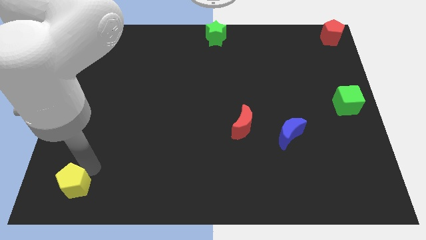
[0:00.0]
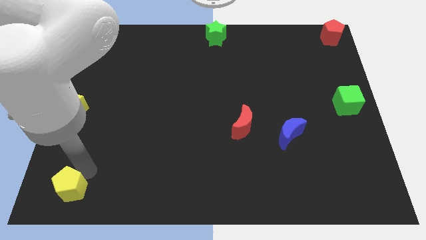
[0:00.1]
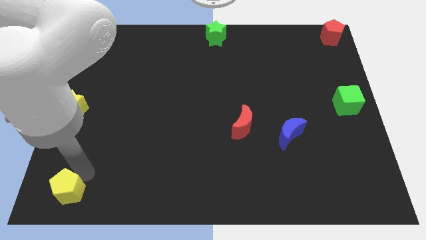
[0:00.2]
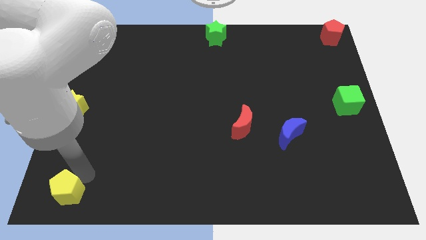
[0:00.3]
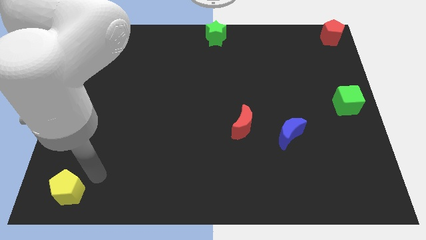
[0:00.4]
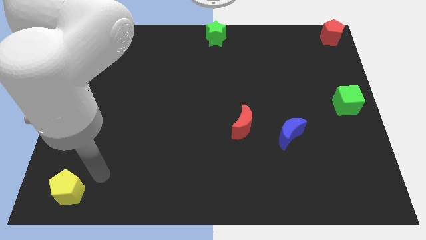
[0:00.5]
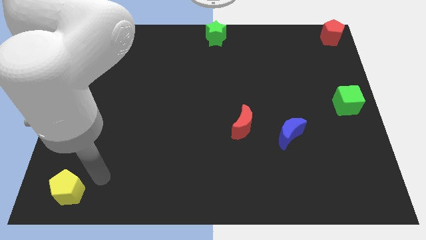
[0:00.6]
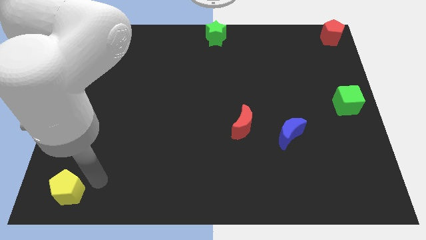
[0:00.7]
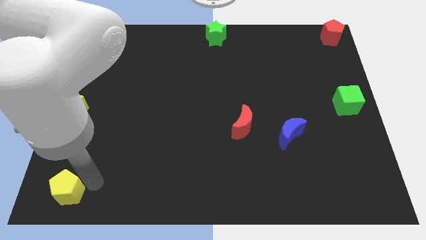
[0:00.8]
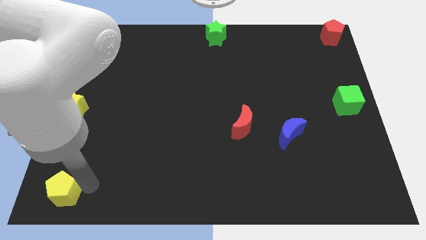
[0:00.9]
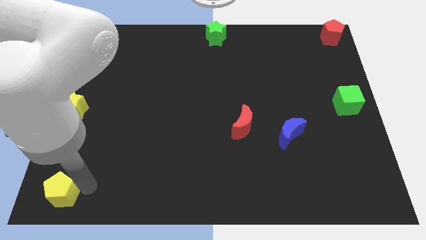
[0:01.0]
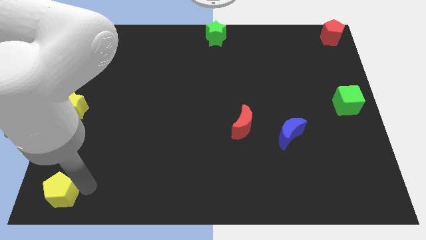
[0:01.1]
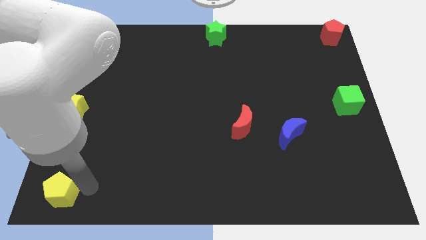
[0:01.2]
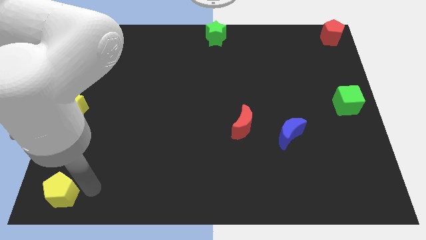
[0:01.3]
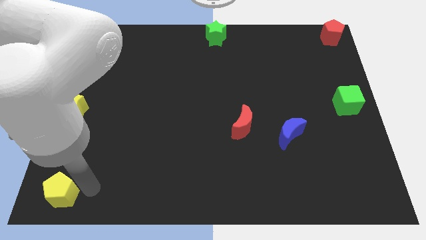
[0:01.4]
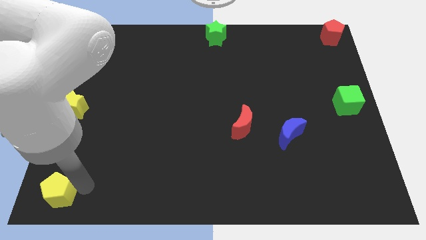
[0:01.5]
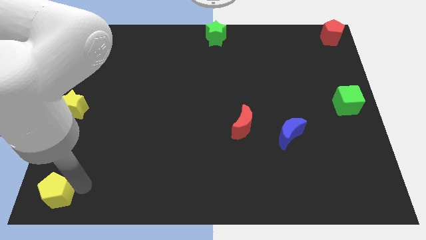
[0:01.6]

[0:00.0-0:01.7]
push the yellow pentagon to the bottom left corner of the board

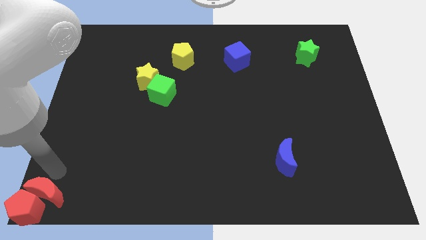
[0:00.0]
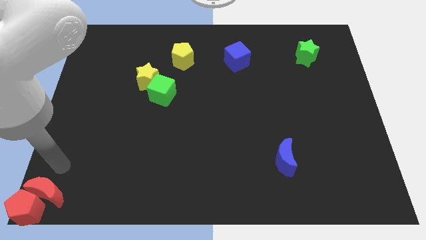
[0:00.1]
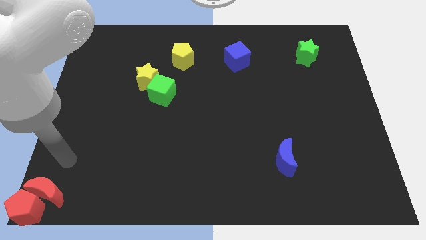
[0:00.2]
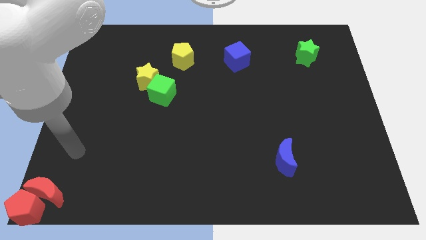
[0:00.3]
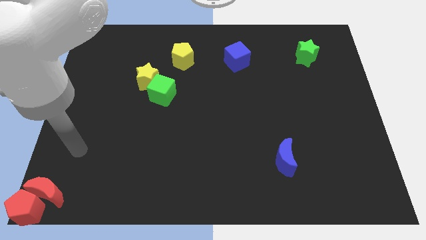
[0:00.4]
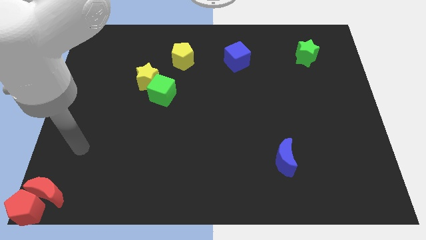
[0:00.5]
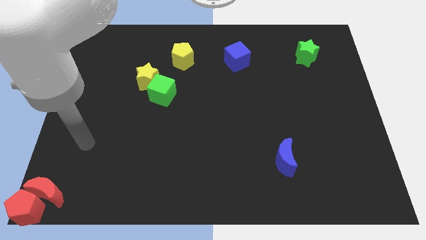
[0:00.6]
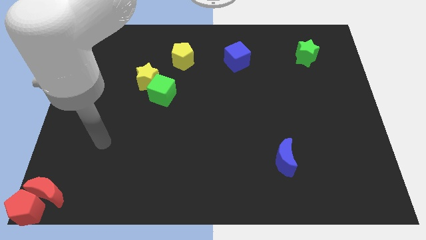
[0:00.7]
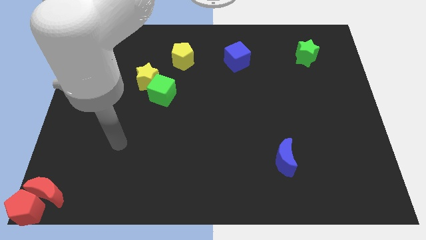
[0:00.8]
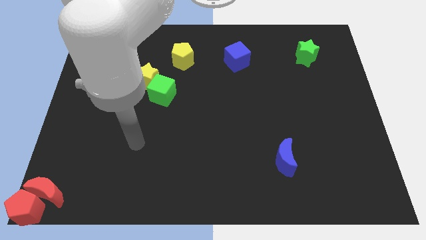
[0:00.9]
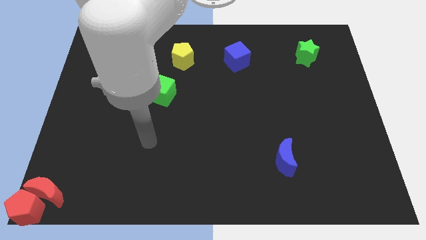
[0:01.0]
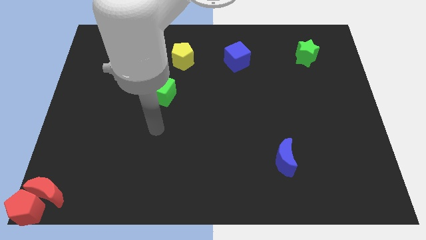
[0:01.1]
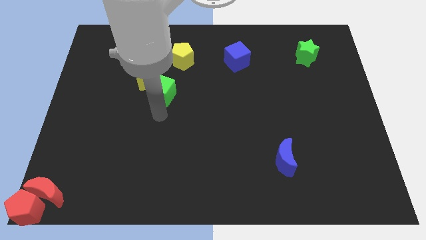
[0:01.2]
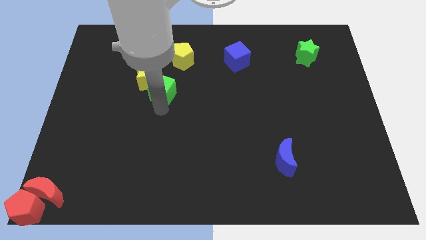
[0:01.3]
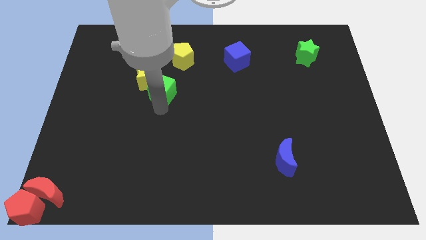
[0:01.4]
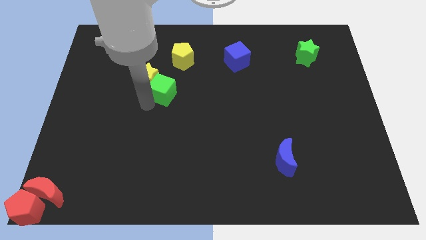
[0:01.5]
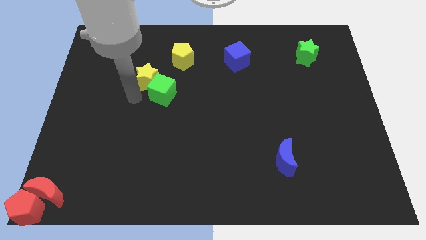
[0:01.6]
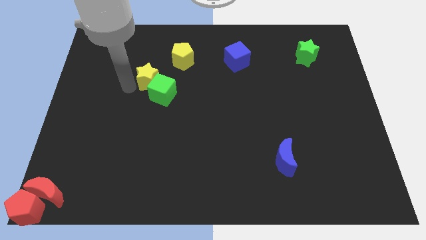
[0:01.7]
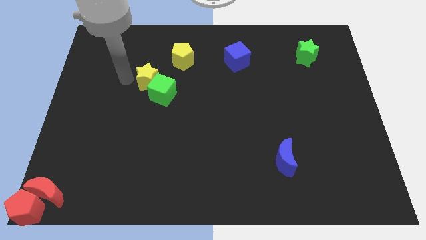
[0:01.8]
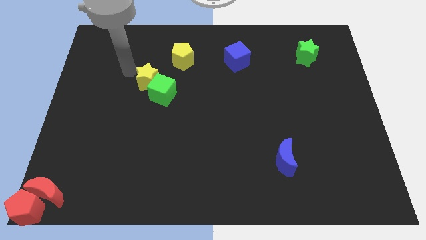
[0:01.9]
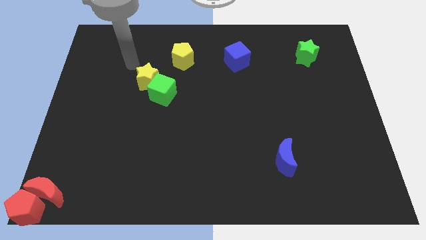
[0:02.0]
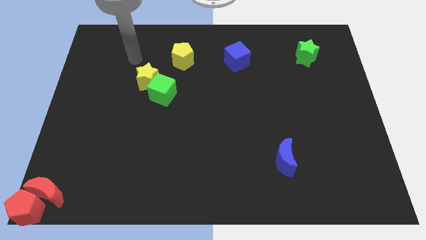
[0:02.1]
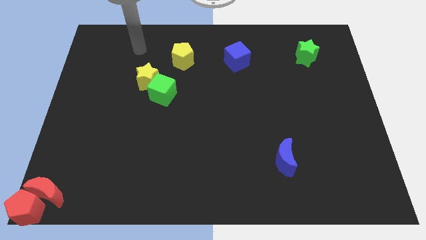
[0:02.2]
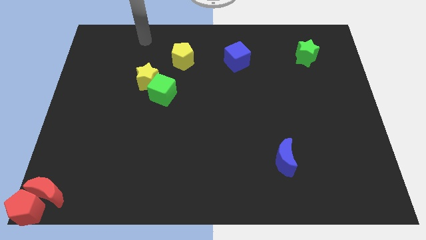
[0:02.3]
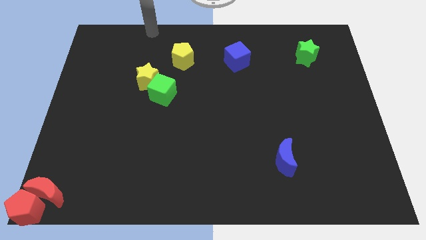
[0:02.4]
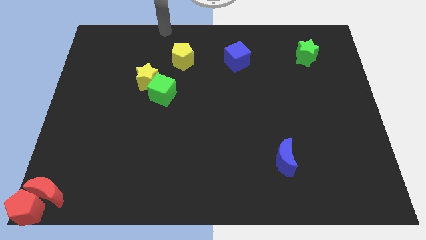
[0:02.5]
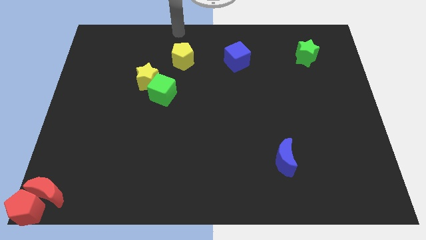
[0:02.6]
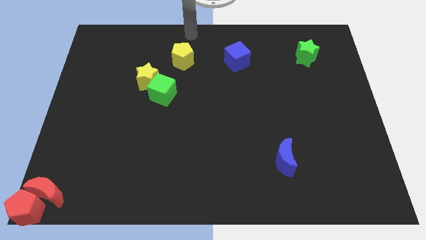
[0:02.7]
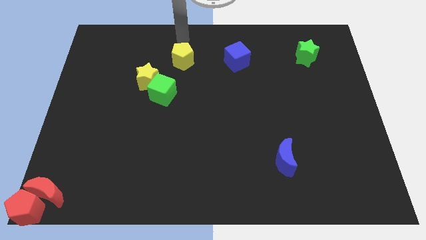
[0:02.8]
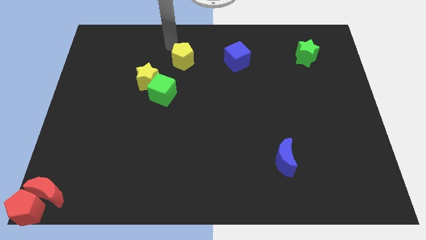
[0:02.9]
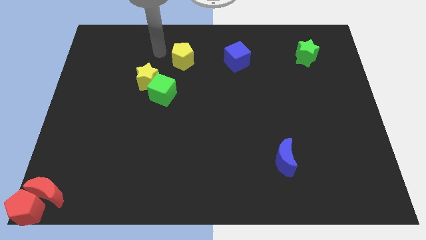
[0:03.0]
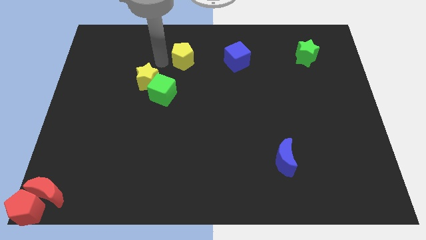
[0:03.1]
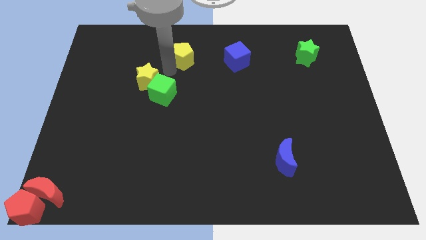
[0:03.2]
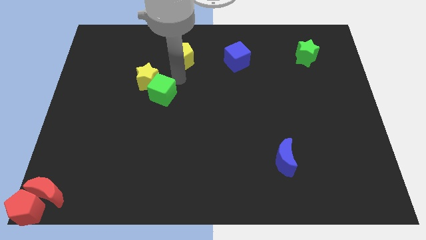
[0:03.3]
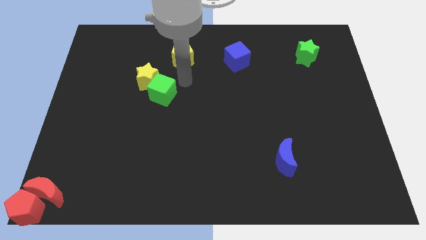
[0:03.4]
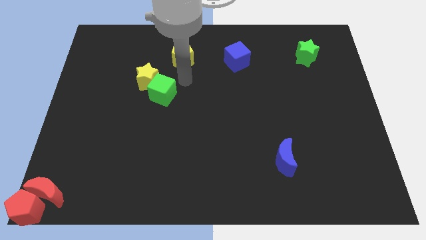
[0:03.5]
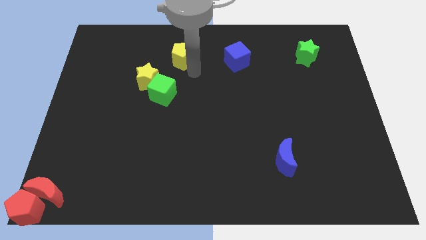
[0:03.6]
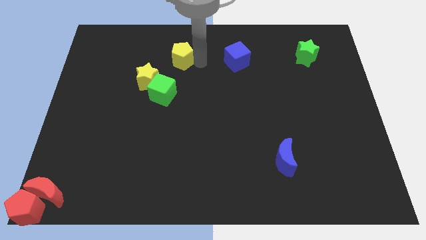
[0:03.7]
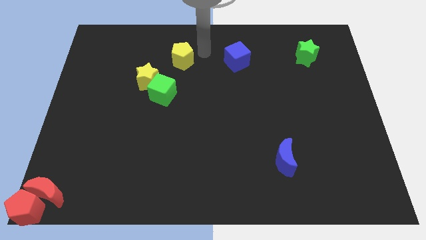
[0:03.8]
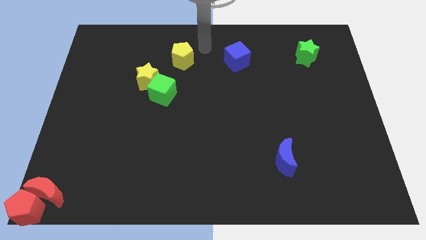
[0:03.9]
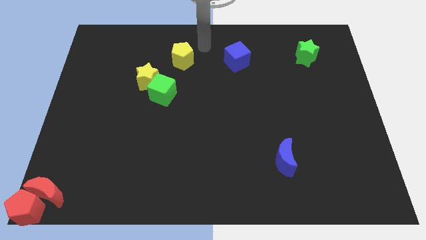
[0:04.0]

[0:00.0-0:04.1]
move your arm away from the red moon

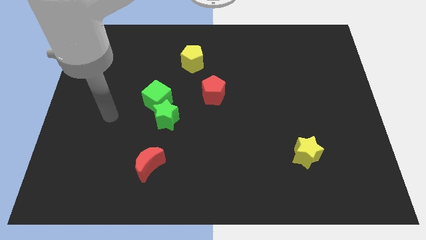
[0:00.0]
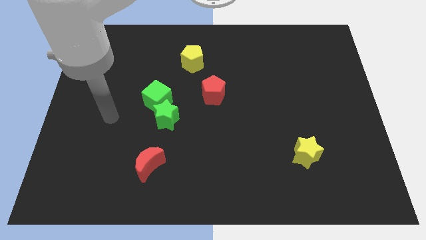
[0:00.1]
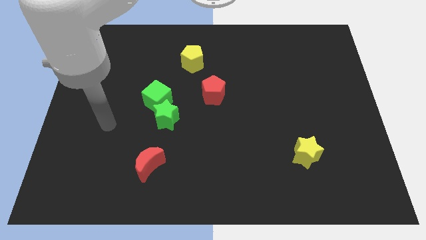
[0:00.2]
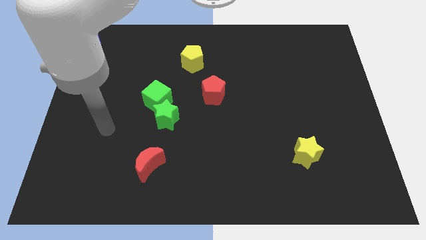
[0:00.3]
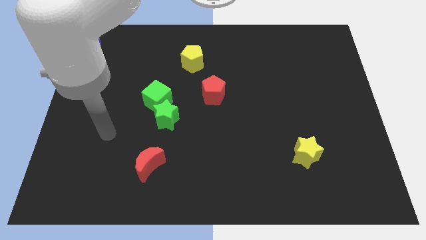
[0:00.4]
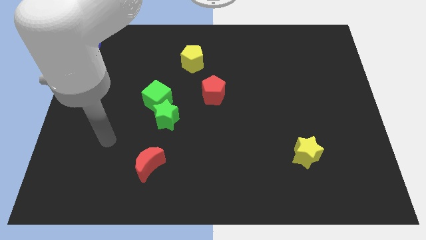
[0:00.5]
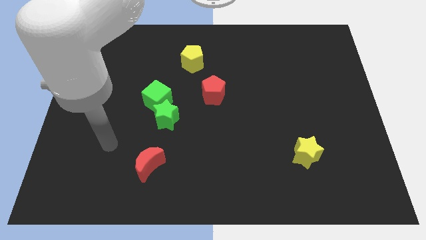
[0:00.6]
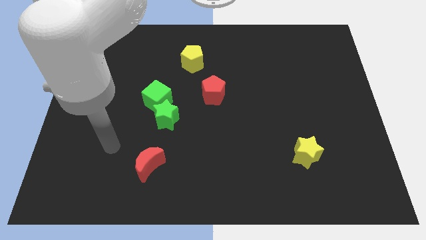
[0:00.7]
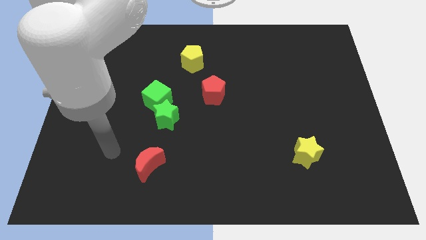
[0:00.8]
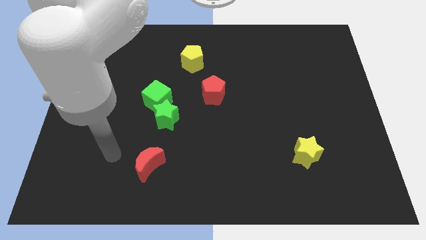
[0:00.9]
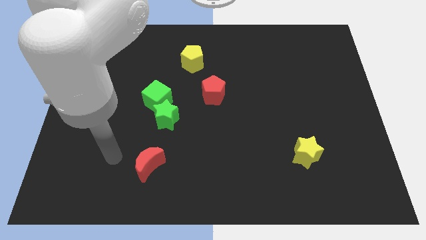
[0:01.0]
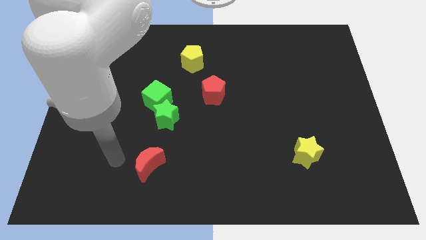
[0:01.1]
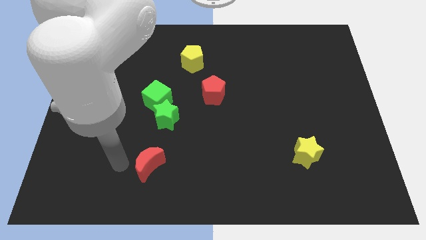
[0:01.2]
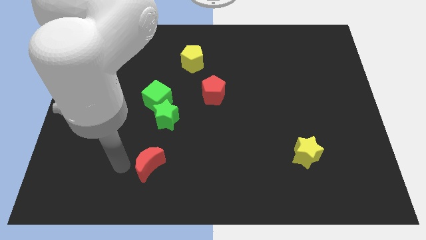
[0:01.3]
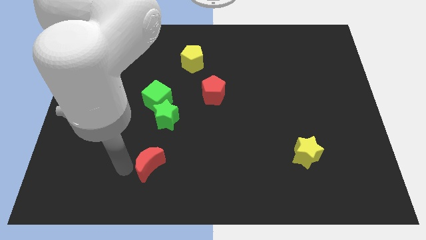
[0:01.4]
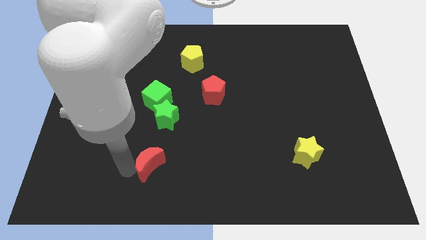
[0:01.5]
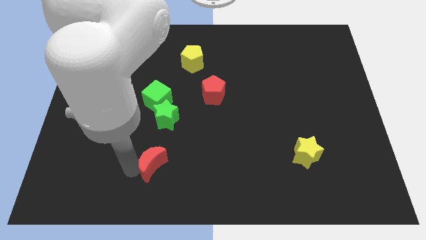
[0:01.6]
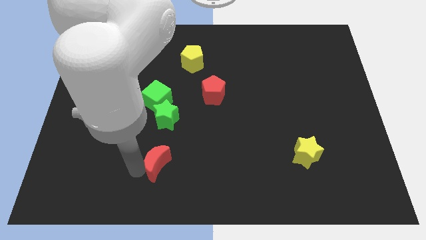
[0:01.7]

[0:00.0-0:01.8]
touch the left side of th ered crescent

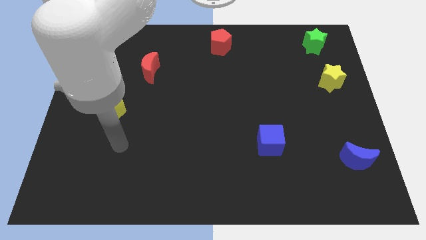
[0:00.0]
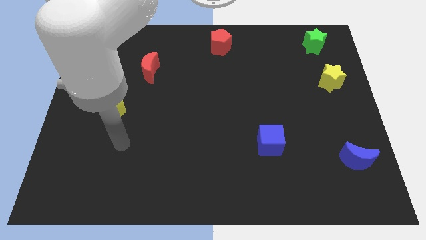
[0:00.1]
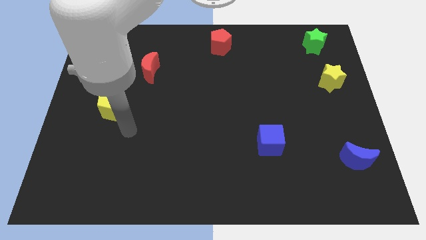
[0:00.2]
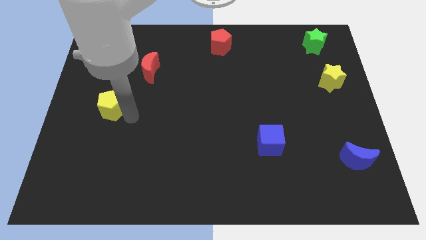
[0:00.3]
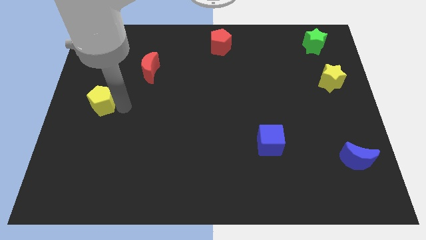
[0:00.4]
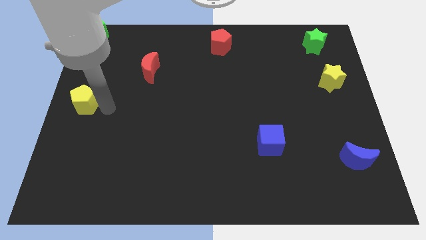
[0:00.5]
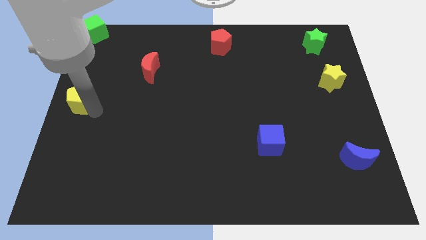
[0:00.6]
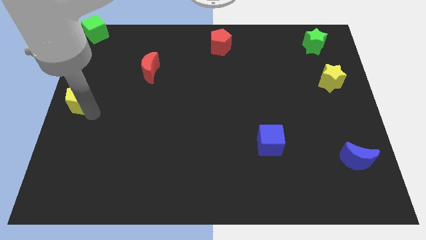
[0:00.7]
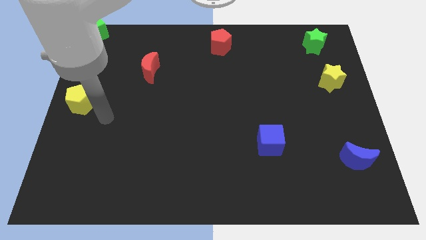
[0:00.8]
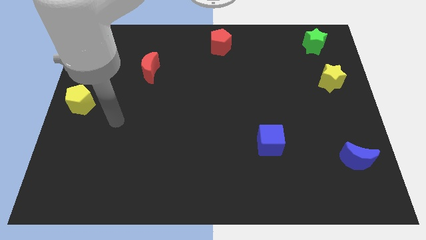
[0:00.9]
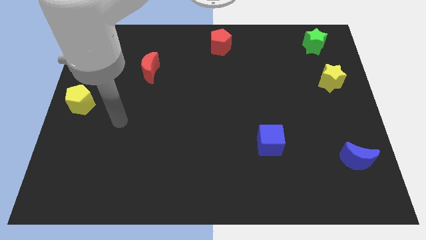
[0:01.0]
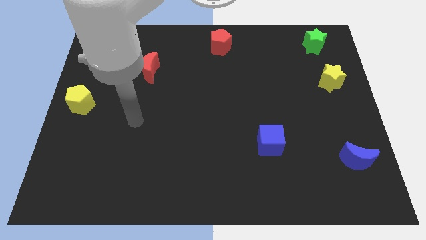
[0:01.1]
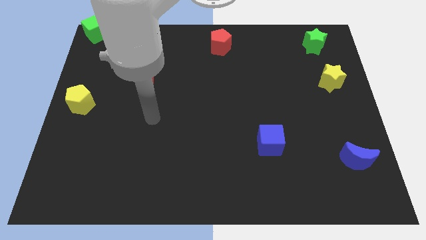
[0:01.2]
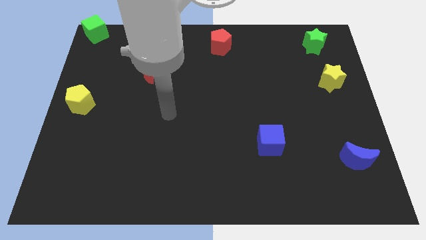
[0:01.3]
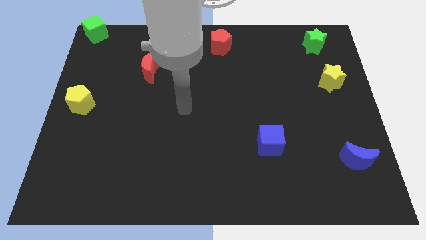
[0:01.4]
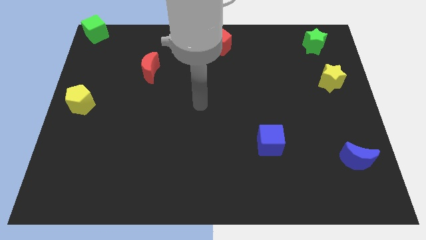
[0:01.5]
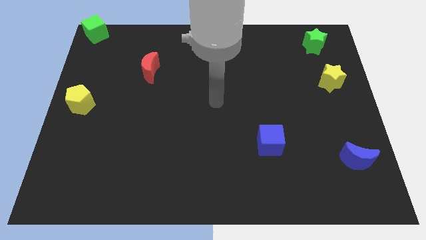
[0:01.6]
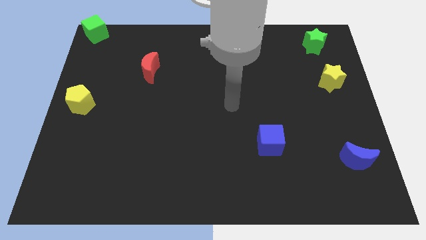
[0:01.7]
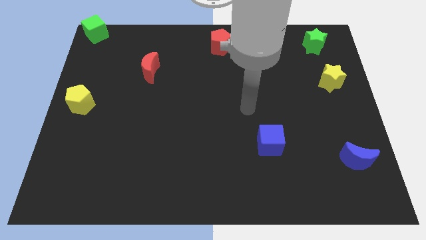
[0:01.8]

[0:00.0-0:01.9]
push the yellow pentagon to the left center
